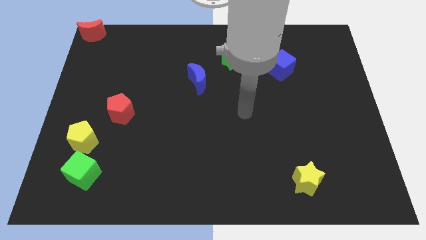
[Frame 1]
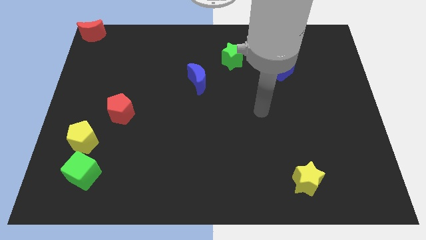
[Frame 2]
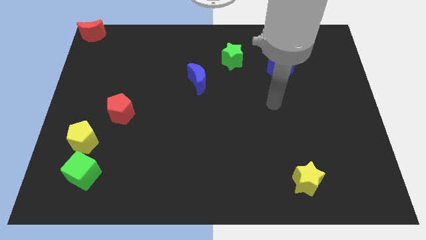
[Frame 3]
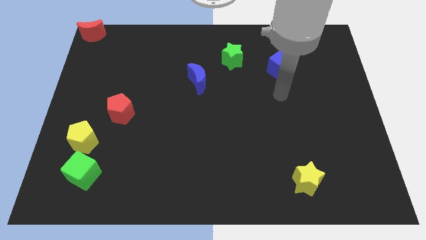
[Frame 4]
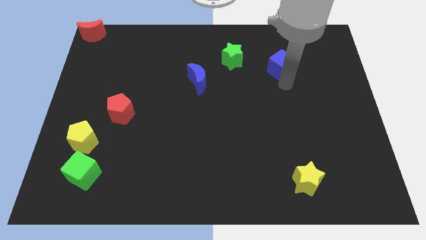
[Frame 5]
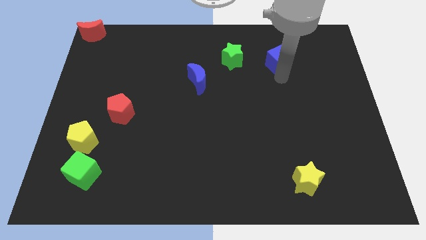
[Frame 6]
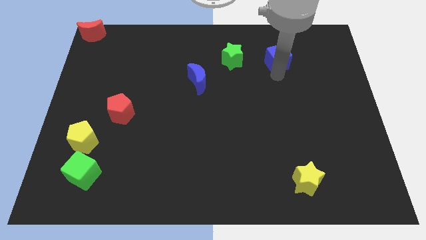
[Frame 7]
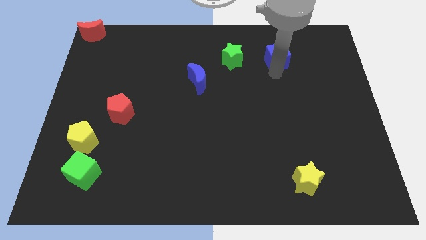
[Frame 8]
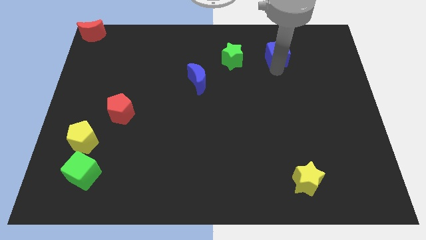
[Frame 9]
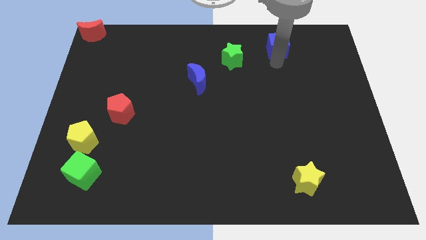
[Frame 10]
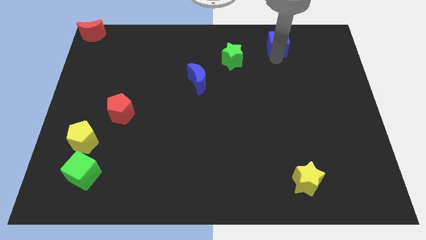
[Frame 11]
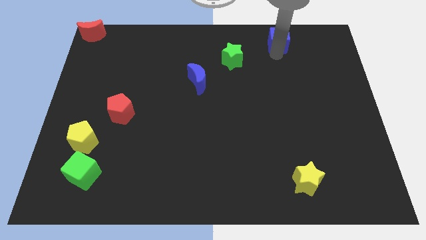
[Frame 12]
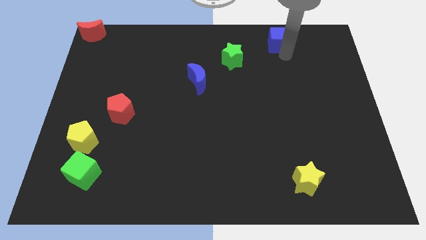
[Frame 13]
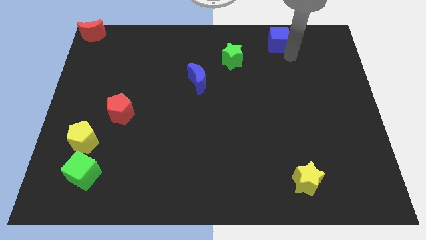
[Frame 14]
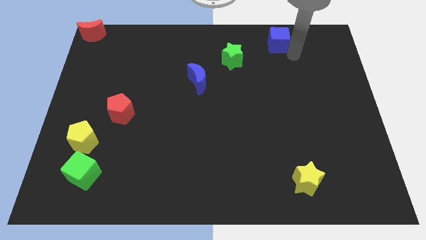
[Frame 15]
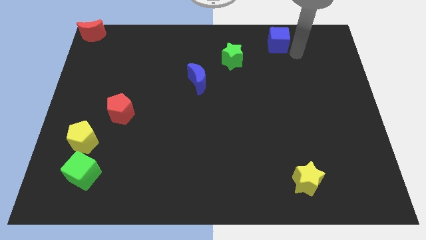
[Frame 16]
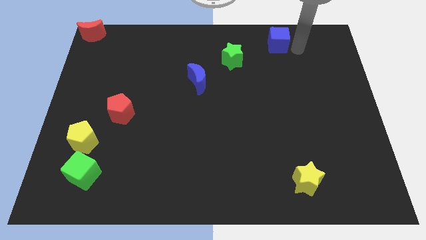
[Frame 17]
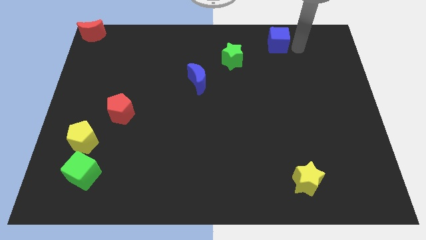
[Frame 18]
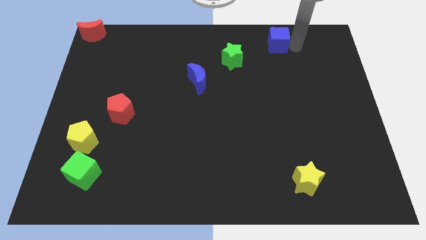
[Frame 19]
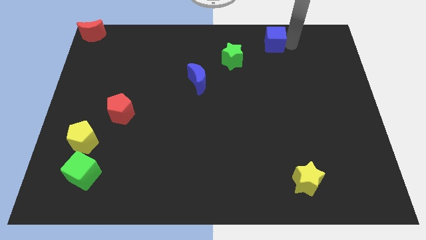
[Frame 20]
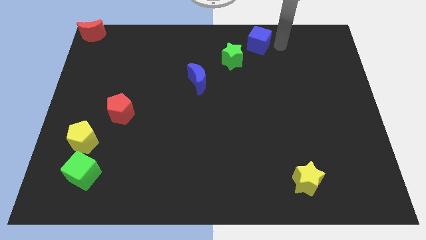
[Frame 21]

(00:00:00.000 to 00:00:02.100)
move blue cube to top right of green star

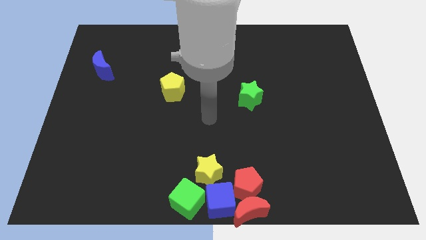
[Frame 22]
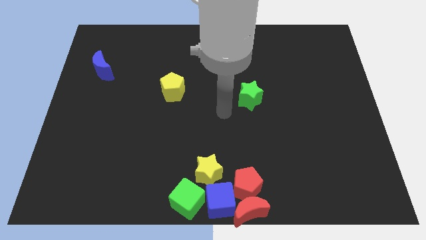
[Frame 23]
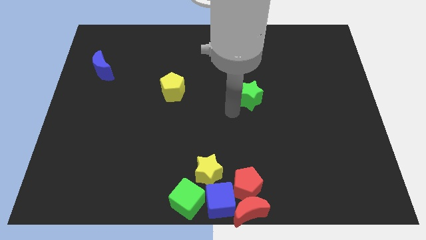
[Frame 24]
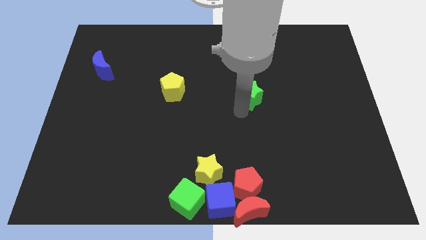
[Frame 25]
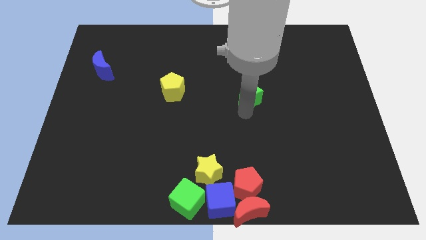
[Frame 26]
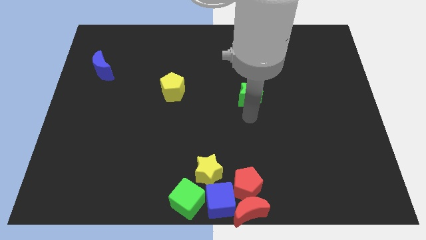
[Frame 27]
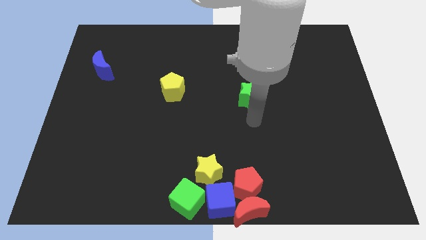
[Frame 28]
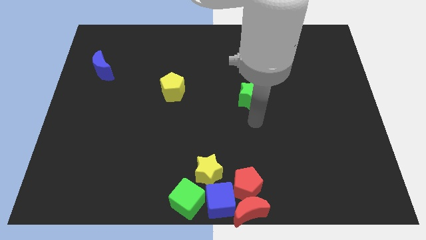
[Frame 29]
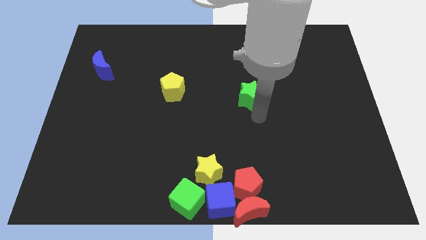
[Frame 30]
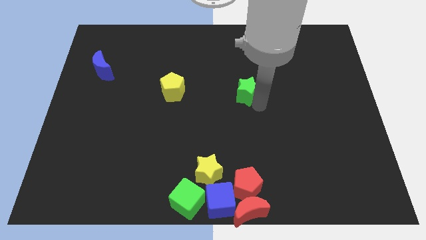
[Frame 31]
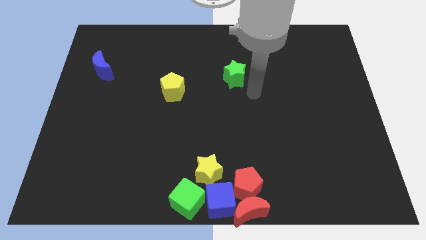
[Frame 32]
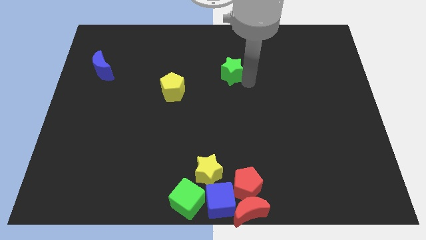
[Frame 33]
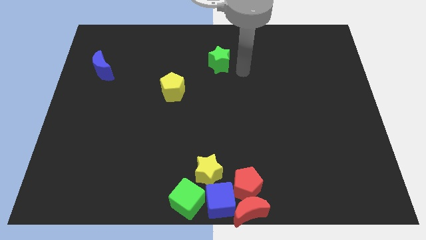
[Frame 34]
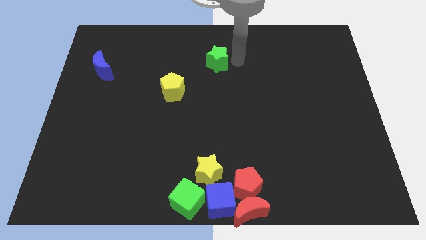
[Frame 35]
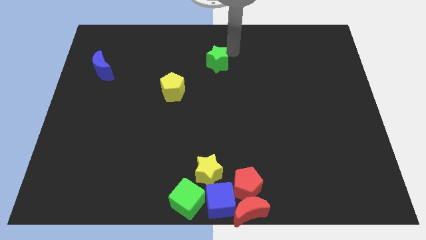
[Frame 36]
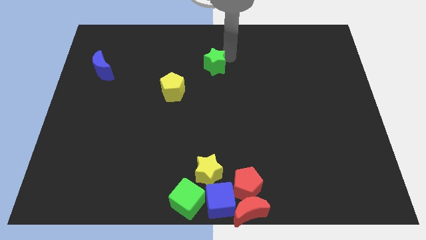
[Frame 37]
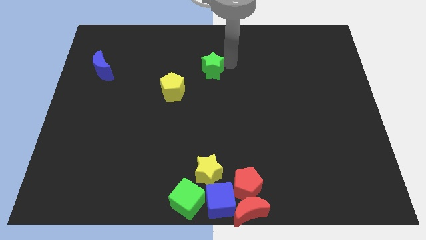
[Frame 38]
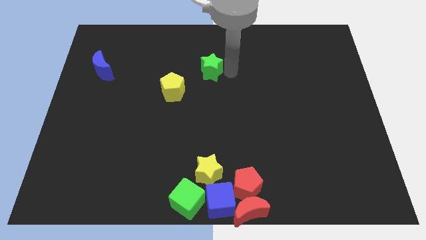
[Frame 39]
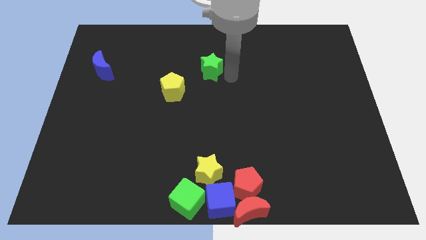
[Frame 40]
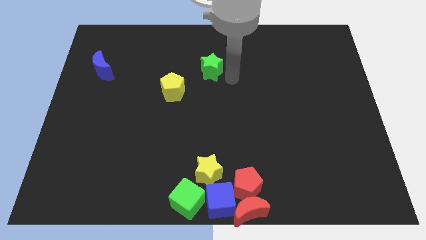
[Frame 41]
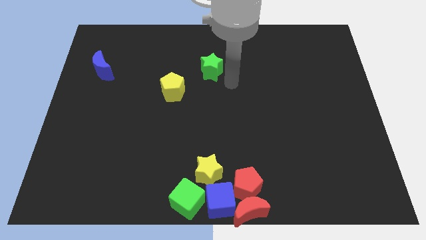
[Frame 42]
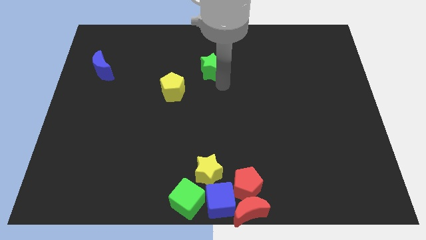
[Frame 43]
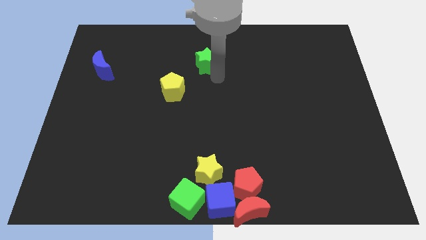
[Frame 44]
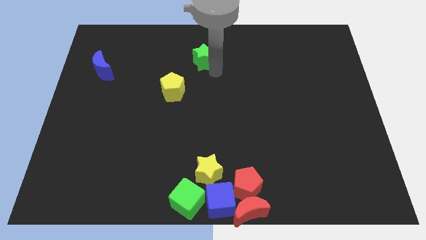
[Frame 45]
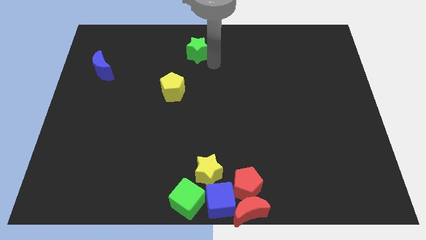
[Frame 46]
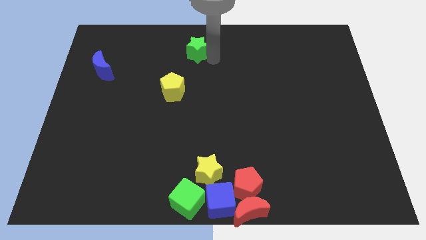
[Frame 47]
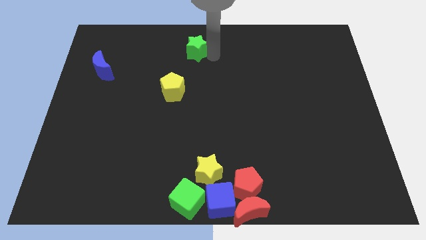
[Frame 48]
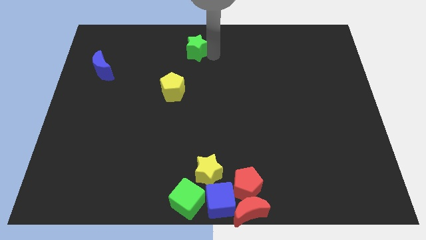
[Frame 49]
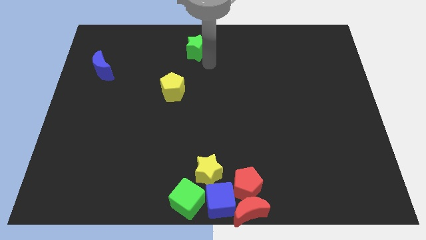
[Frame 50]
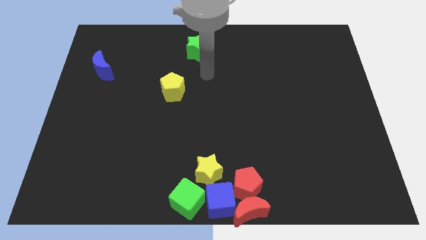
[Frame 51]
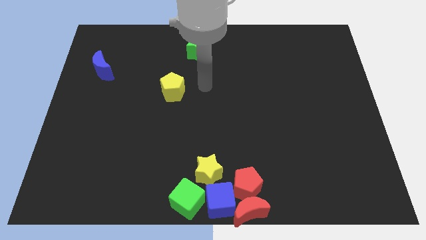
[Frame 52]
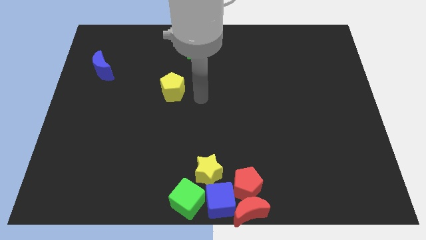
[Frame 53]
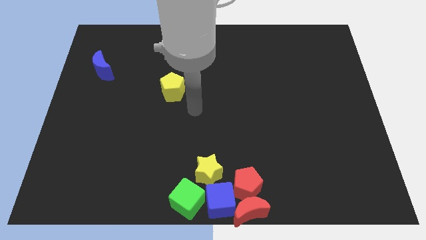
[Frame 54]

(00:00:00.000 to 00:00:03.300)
move the green star to the top of the yellow star

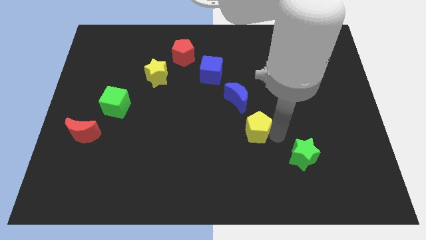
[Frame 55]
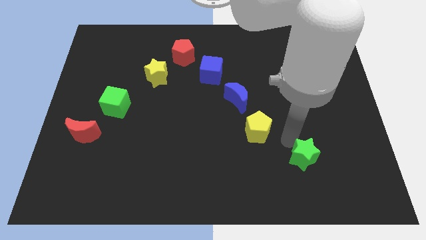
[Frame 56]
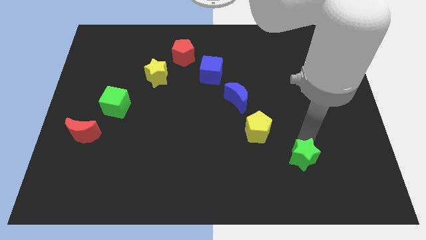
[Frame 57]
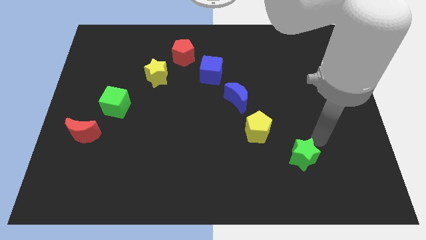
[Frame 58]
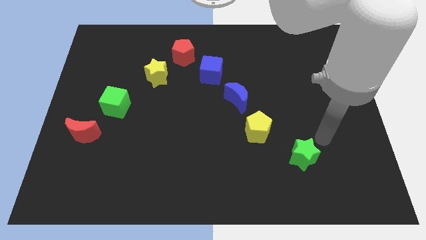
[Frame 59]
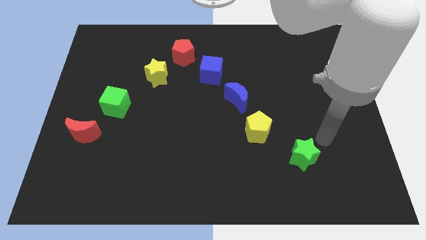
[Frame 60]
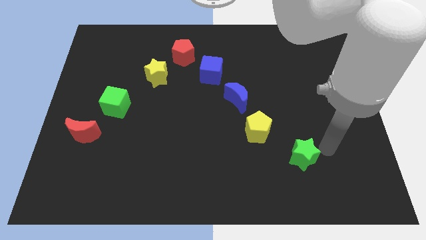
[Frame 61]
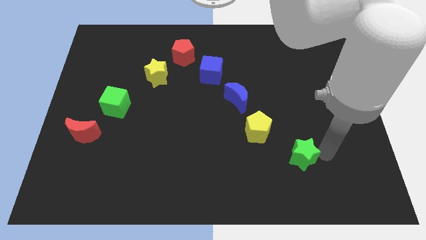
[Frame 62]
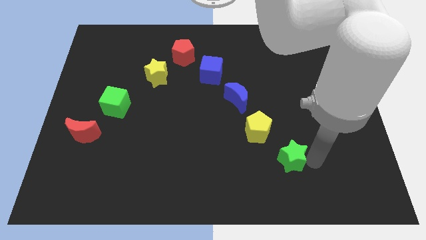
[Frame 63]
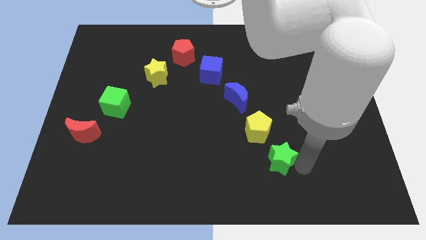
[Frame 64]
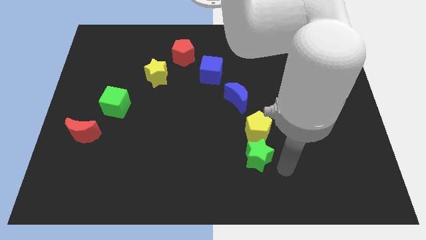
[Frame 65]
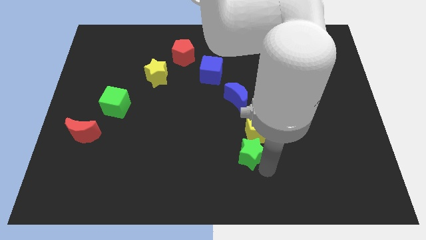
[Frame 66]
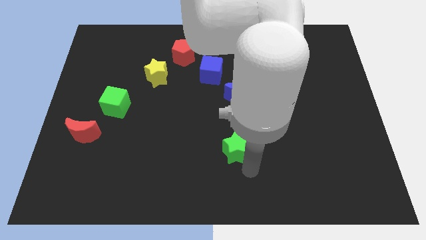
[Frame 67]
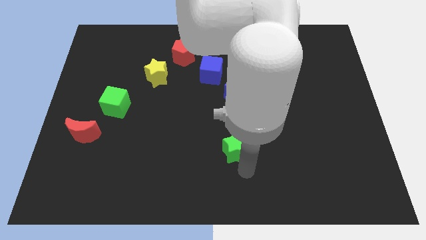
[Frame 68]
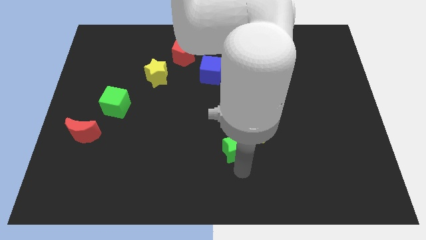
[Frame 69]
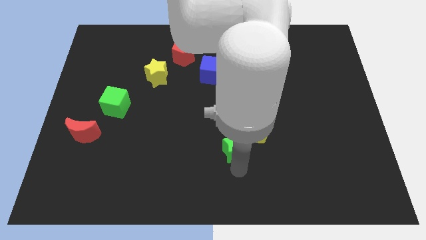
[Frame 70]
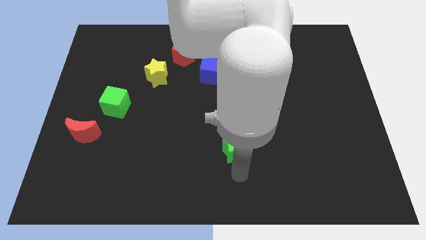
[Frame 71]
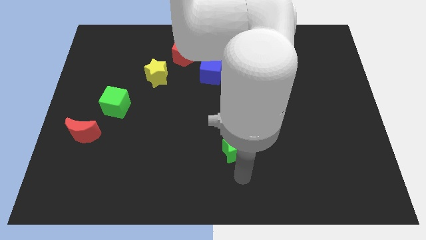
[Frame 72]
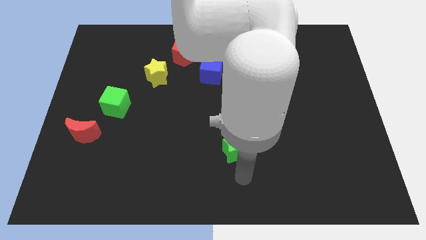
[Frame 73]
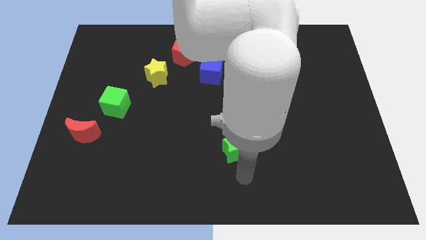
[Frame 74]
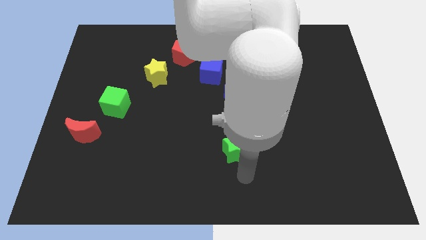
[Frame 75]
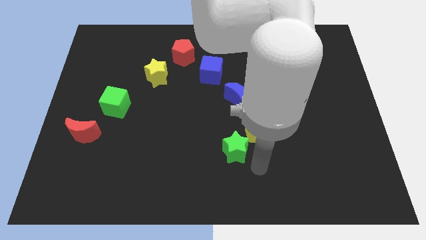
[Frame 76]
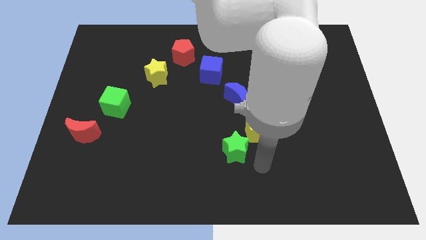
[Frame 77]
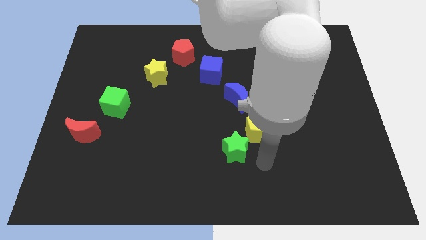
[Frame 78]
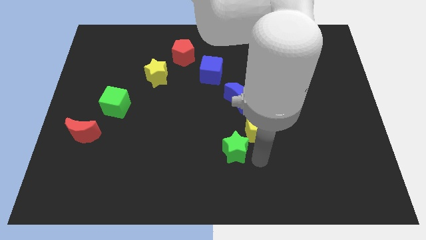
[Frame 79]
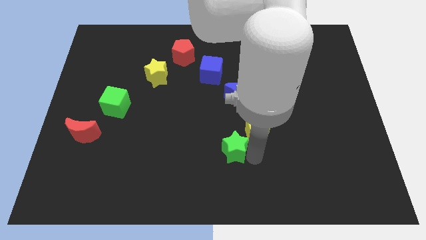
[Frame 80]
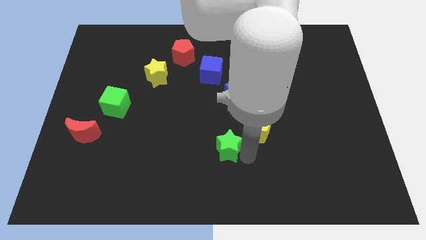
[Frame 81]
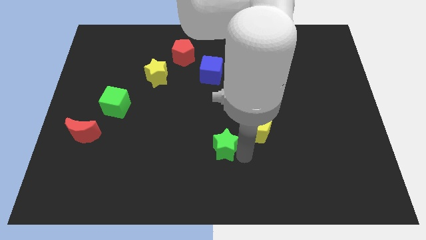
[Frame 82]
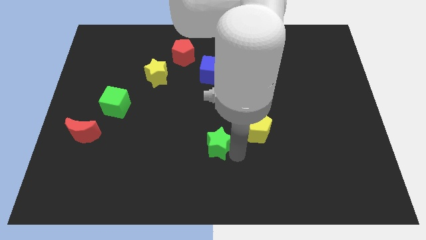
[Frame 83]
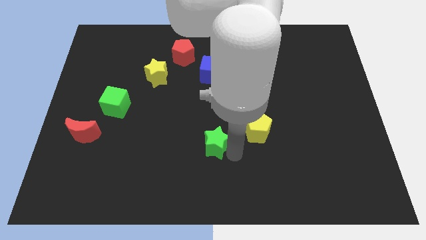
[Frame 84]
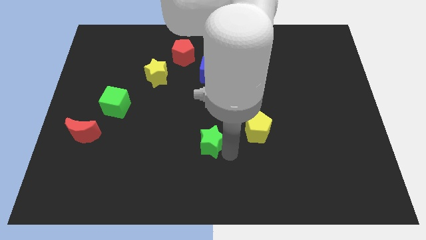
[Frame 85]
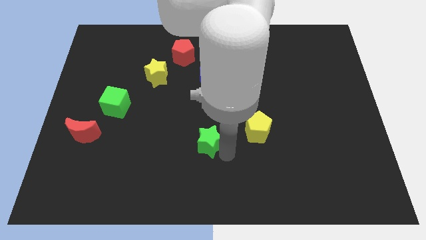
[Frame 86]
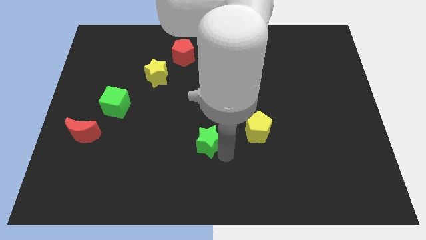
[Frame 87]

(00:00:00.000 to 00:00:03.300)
push the green star towards the center

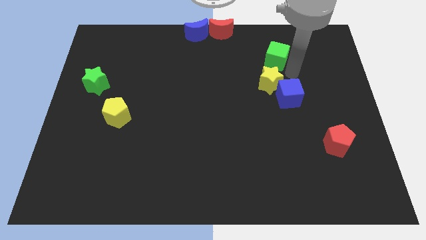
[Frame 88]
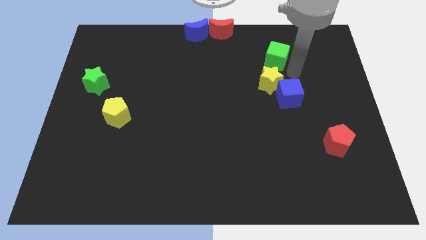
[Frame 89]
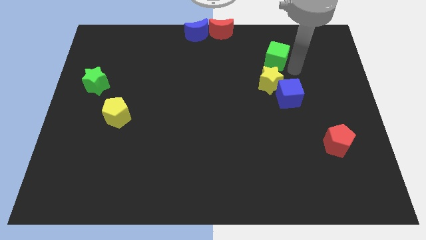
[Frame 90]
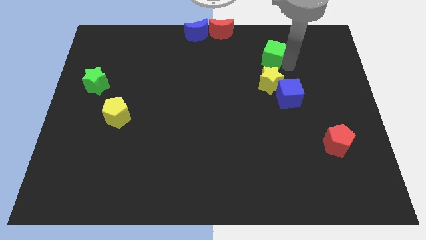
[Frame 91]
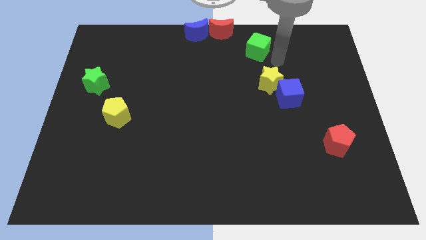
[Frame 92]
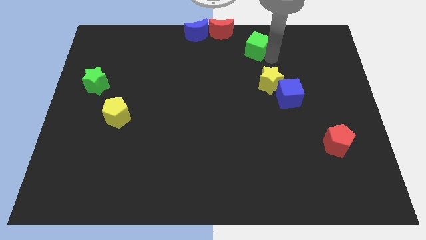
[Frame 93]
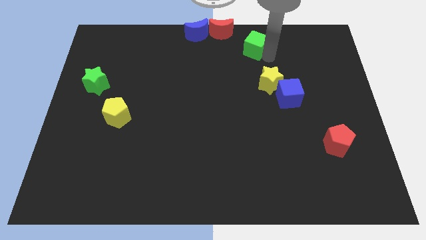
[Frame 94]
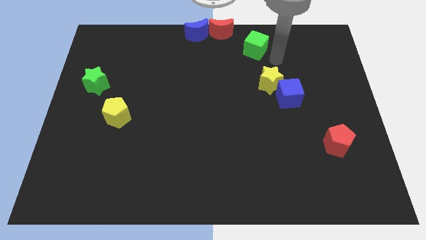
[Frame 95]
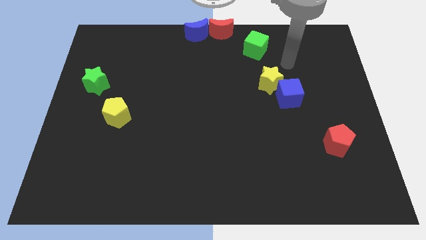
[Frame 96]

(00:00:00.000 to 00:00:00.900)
push the green cube towards the top side of the board
